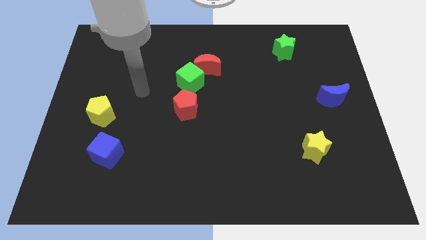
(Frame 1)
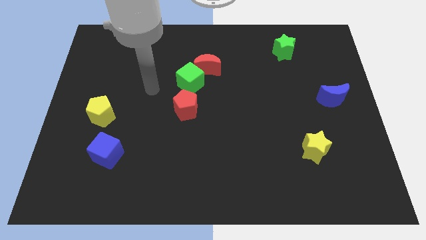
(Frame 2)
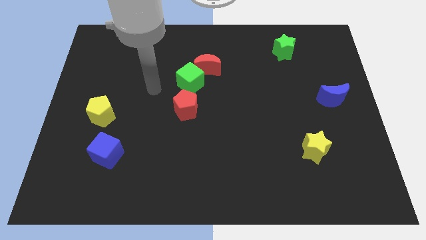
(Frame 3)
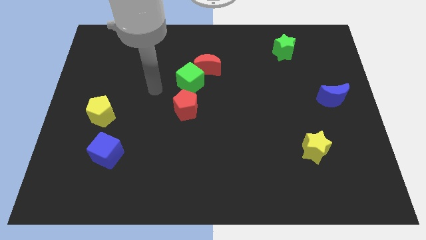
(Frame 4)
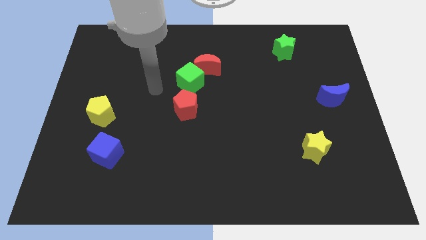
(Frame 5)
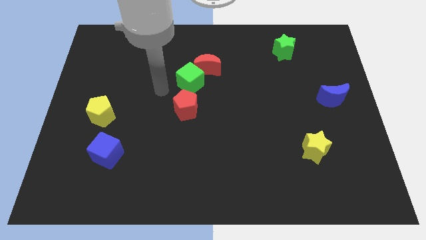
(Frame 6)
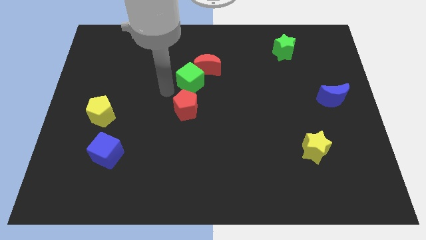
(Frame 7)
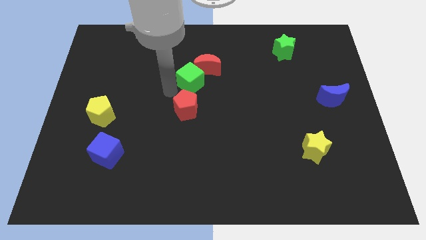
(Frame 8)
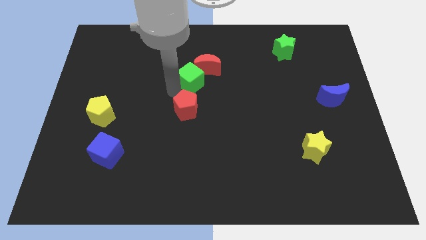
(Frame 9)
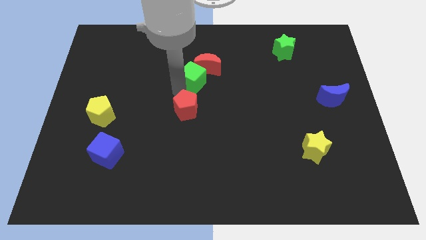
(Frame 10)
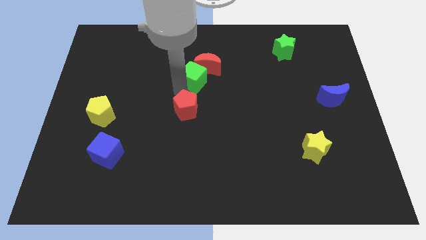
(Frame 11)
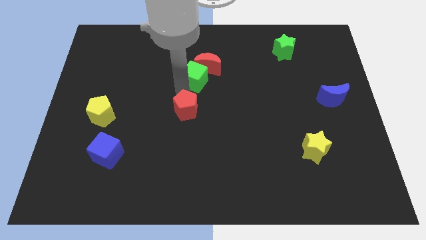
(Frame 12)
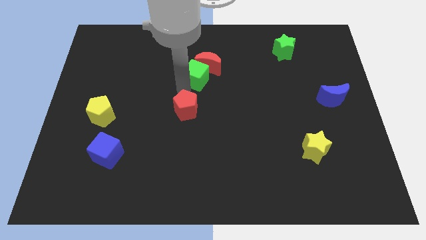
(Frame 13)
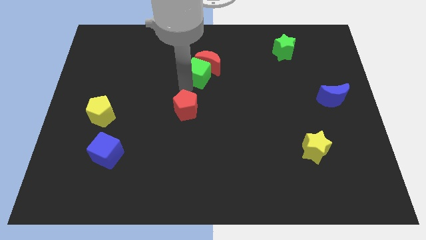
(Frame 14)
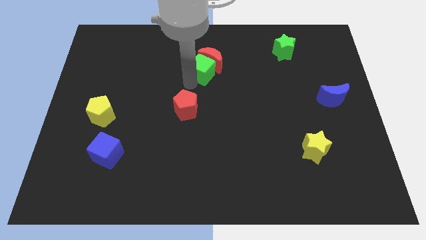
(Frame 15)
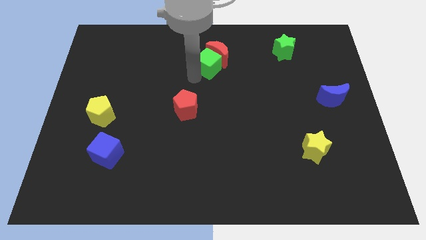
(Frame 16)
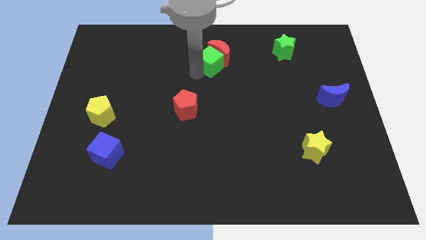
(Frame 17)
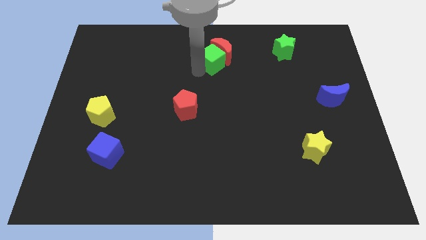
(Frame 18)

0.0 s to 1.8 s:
move the green cube into the red moon

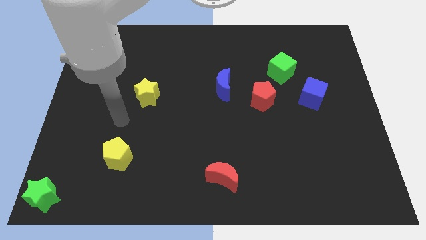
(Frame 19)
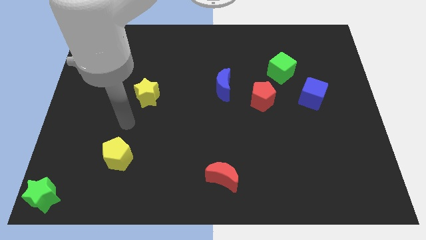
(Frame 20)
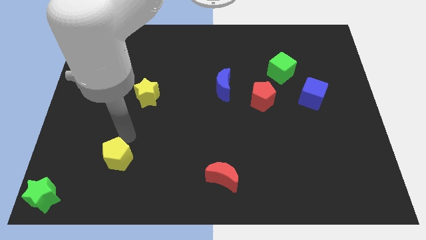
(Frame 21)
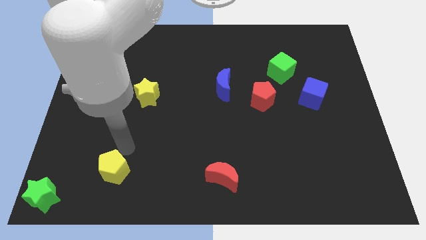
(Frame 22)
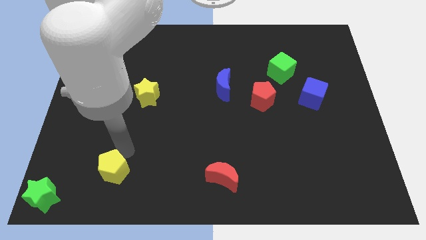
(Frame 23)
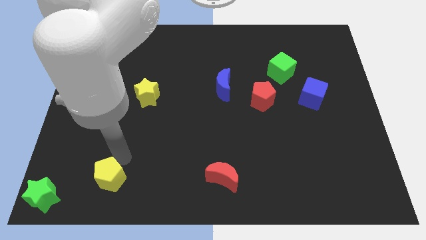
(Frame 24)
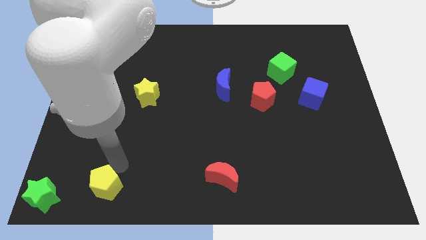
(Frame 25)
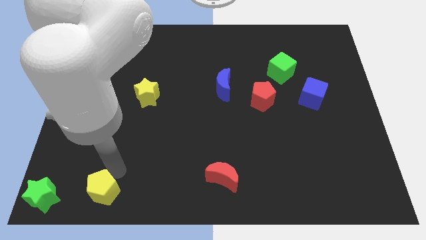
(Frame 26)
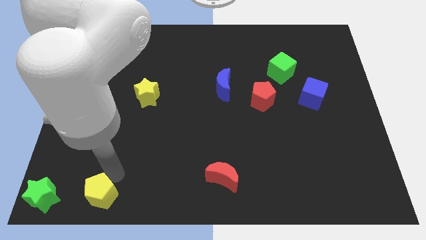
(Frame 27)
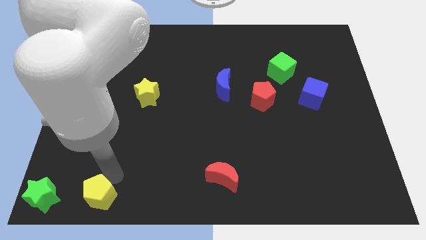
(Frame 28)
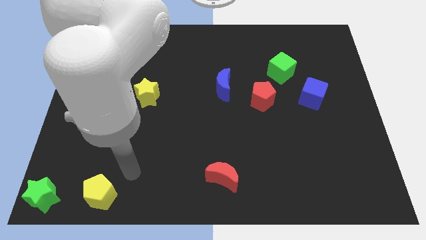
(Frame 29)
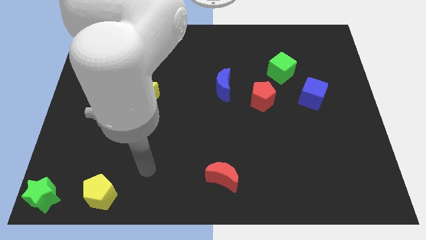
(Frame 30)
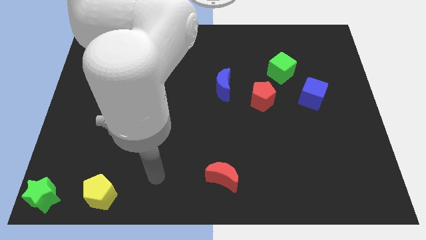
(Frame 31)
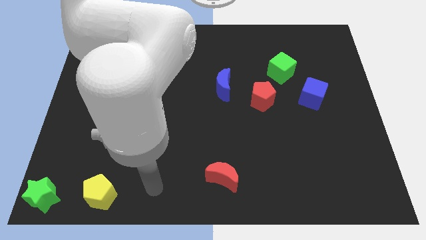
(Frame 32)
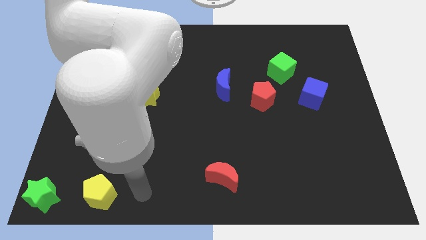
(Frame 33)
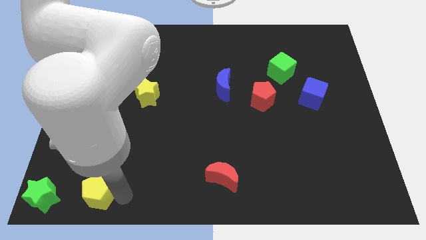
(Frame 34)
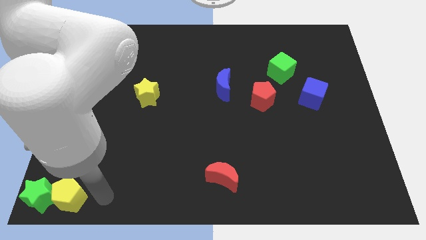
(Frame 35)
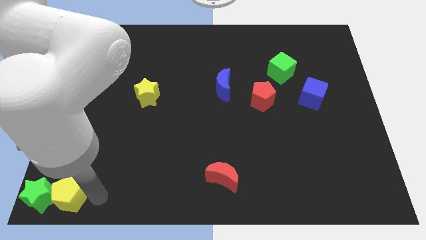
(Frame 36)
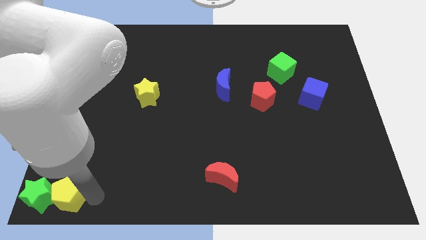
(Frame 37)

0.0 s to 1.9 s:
move the yellow pentagon towards the bottom left corner of the board

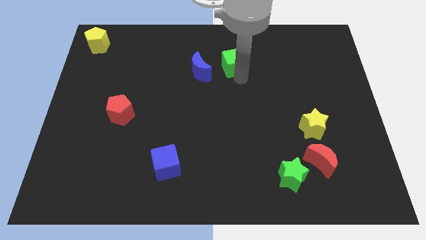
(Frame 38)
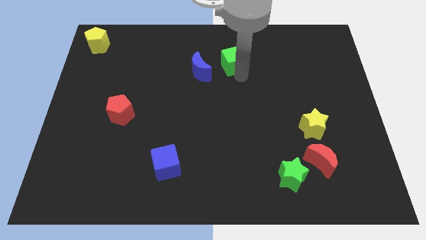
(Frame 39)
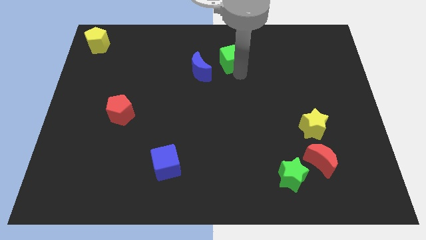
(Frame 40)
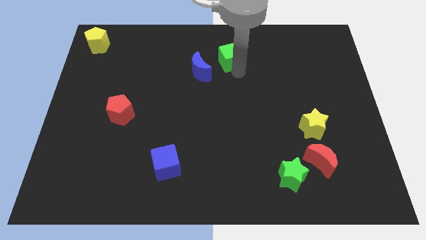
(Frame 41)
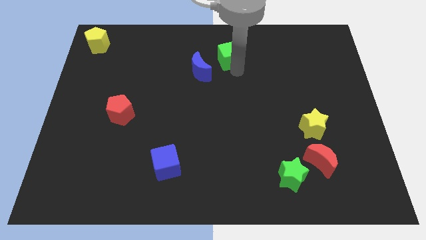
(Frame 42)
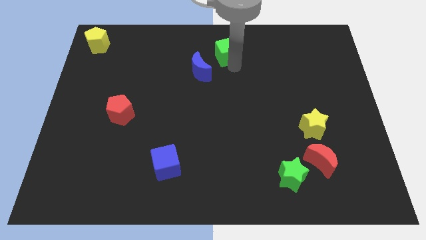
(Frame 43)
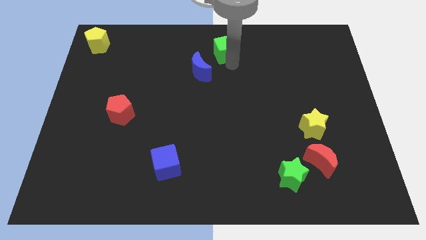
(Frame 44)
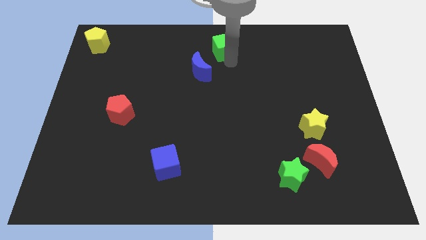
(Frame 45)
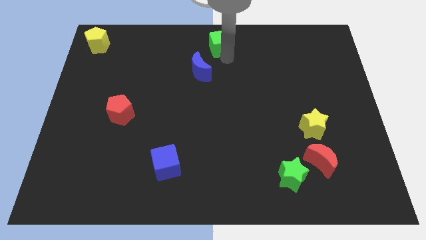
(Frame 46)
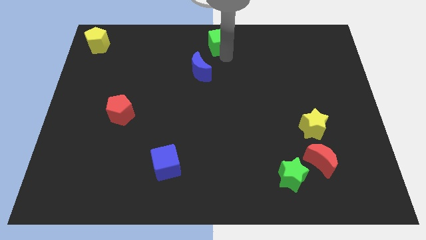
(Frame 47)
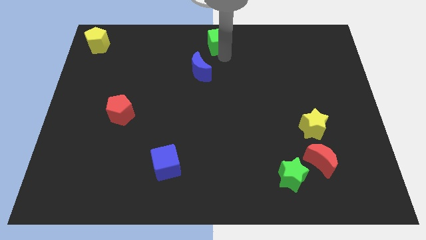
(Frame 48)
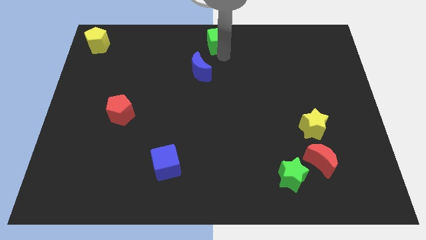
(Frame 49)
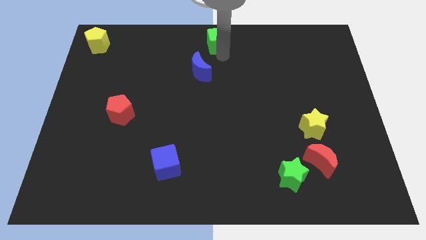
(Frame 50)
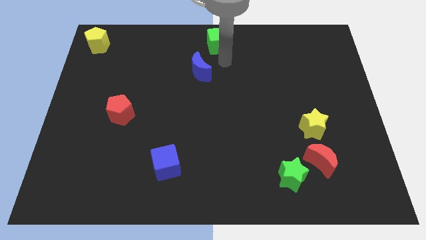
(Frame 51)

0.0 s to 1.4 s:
place the green cube to the top right of the blue moon

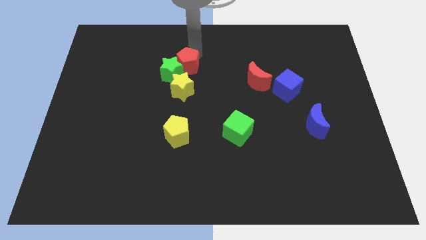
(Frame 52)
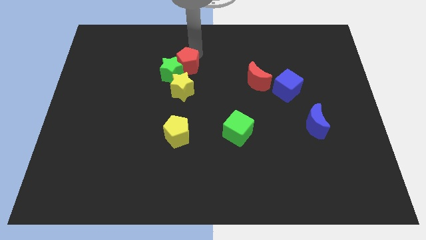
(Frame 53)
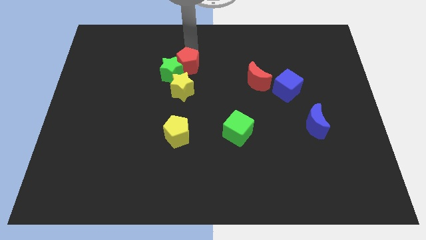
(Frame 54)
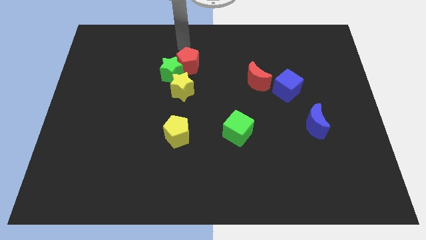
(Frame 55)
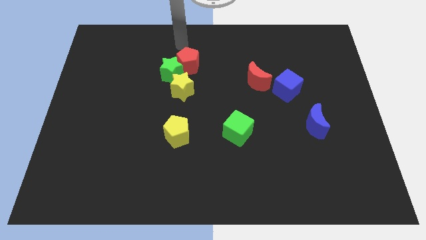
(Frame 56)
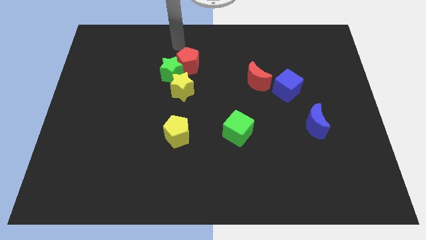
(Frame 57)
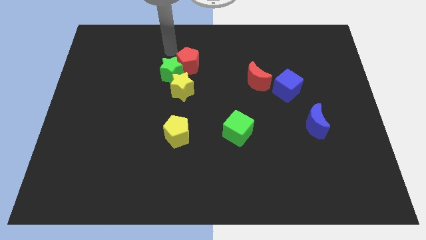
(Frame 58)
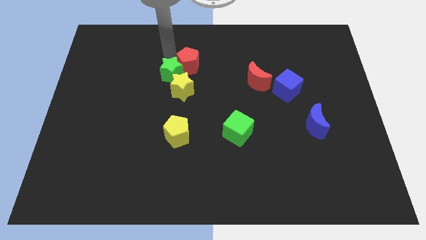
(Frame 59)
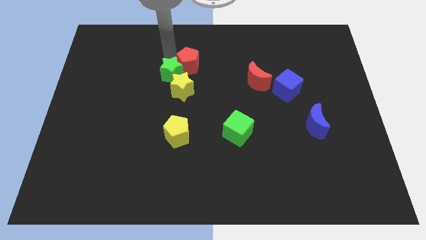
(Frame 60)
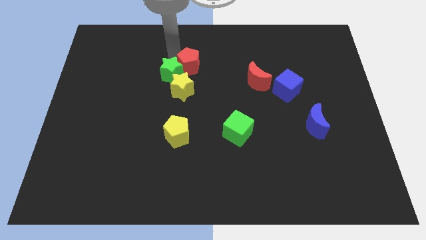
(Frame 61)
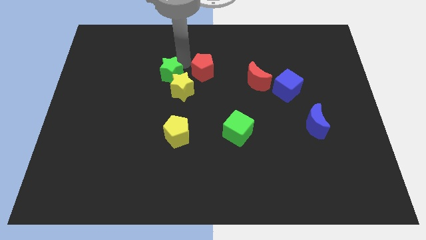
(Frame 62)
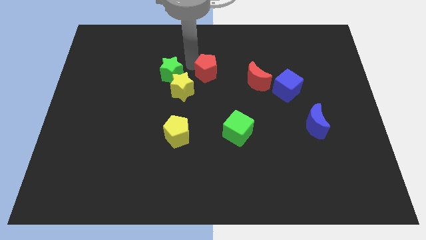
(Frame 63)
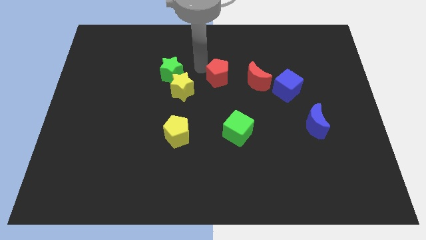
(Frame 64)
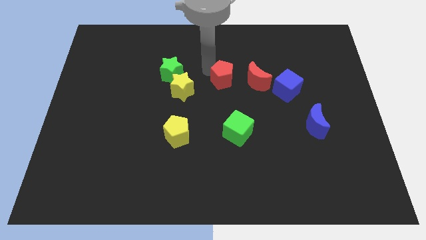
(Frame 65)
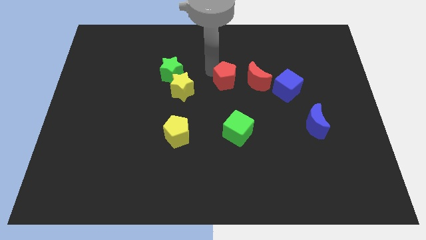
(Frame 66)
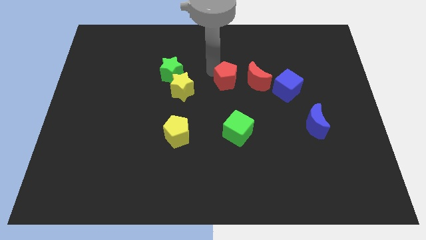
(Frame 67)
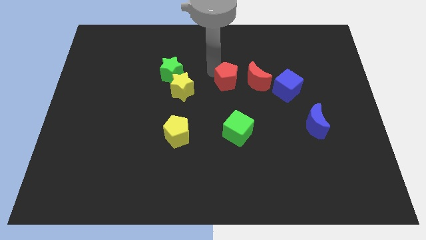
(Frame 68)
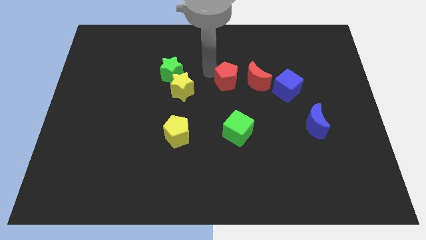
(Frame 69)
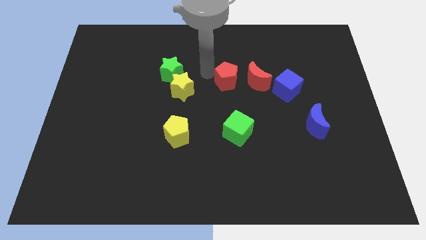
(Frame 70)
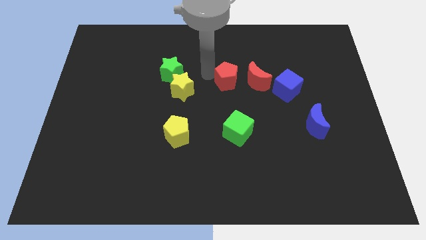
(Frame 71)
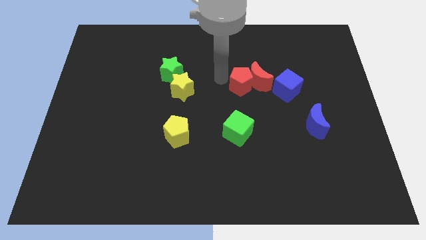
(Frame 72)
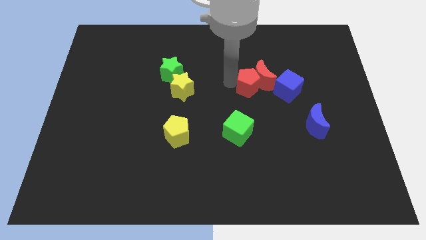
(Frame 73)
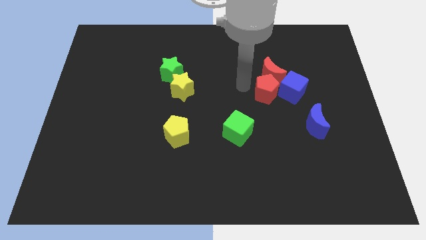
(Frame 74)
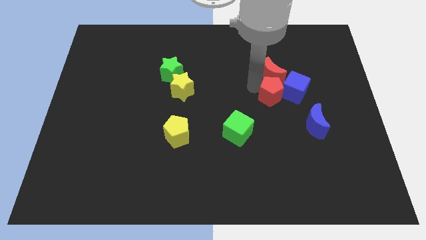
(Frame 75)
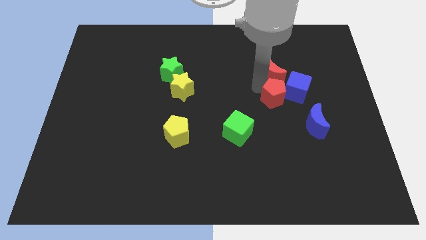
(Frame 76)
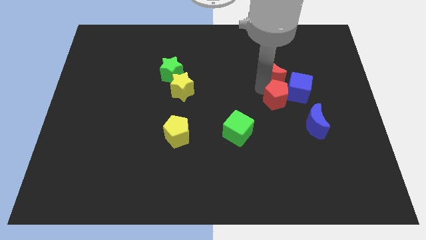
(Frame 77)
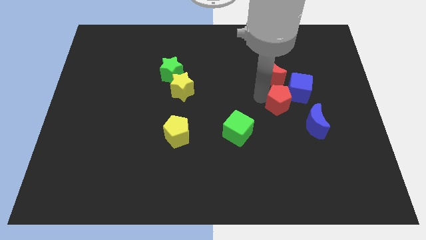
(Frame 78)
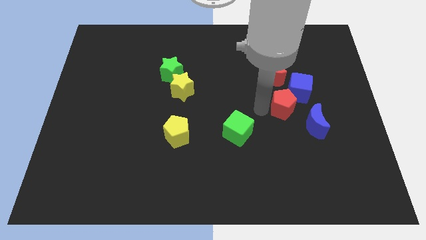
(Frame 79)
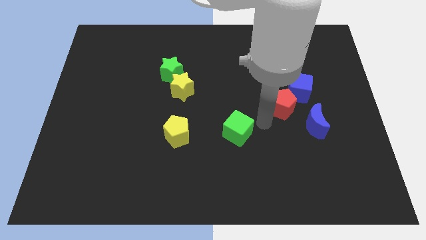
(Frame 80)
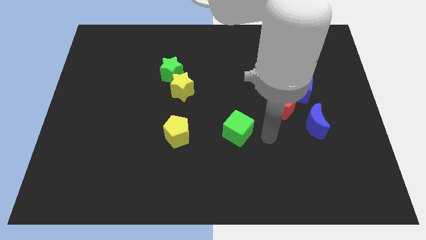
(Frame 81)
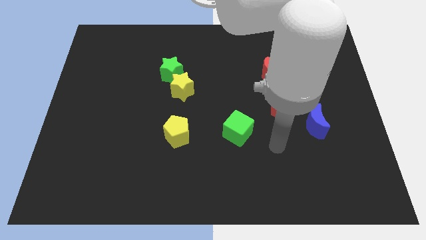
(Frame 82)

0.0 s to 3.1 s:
push the red pentagon below the blue cube

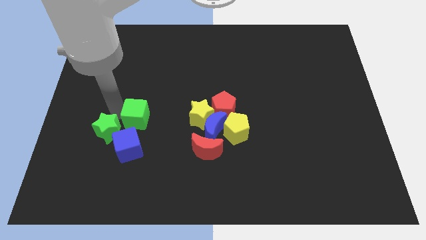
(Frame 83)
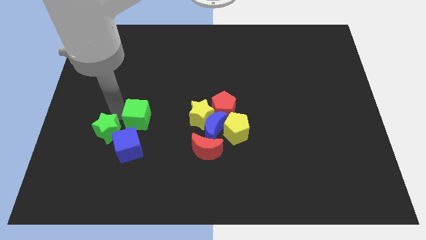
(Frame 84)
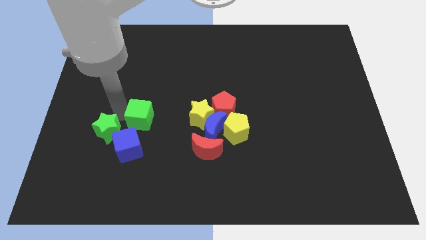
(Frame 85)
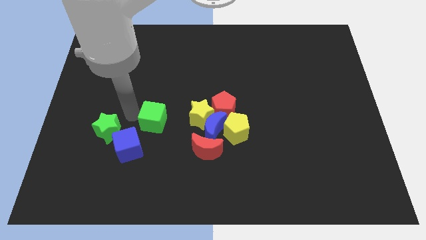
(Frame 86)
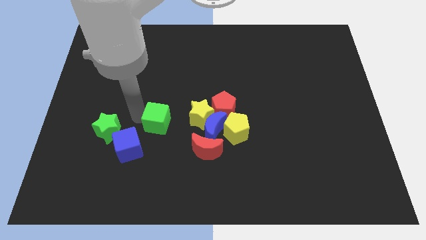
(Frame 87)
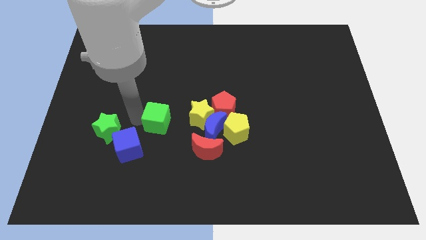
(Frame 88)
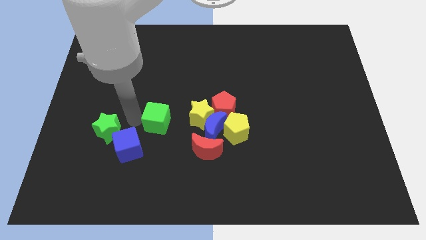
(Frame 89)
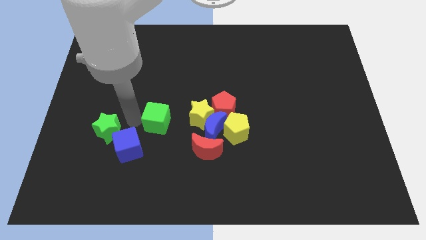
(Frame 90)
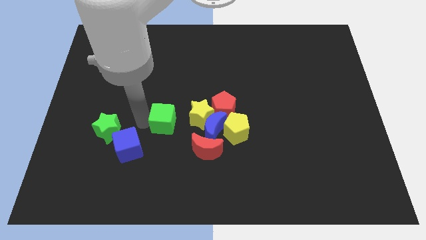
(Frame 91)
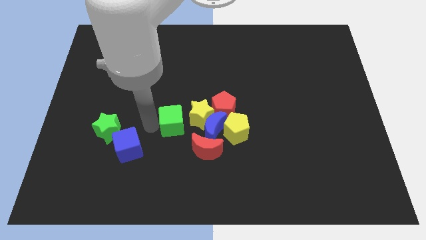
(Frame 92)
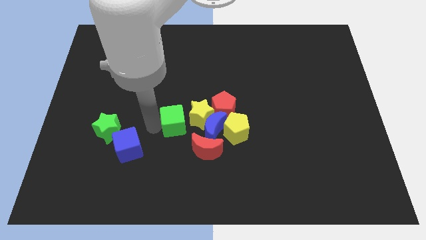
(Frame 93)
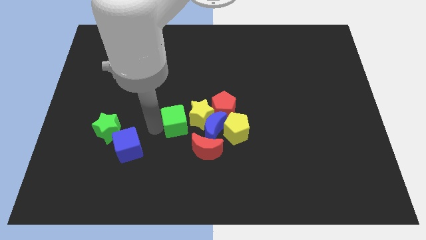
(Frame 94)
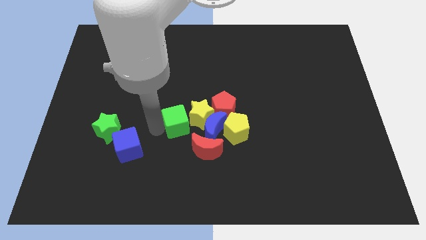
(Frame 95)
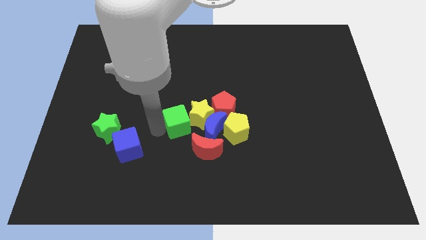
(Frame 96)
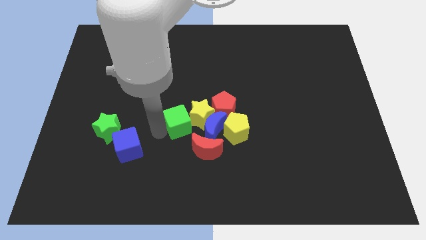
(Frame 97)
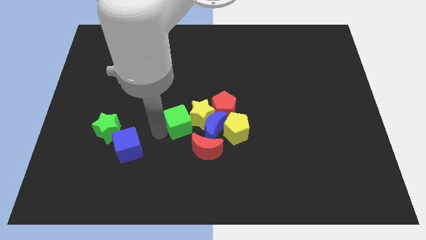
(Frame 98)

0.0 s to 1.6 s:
move green cube into yellow star
